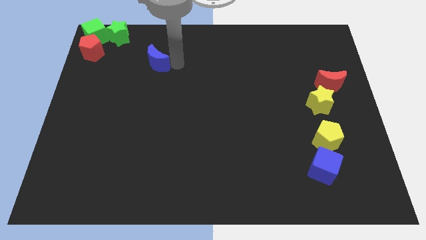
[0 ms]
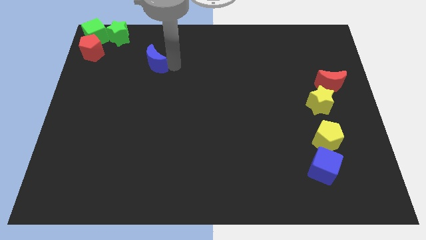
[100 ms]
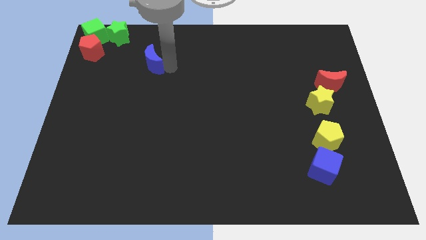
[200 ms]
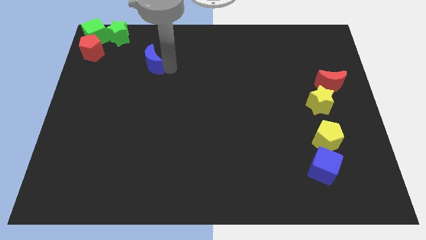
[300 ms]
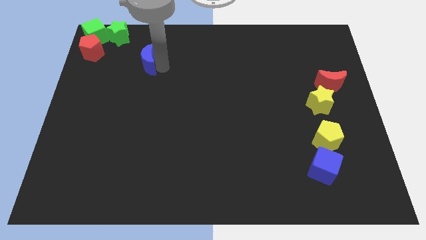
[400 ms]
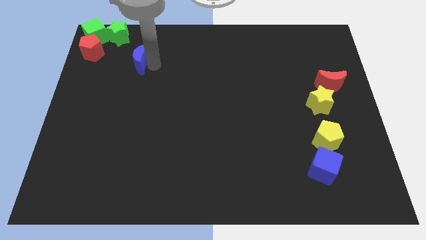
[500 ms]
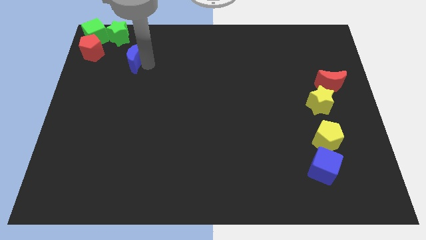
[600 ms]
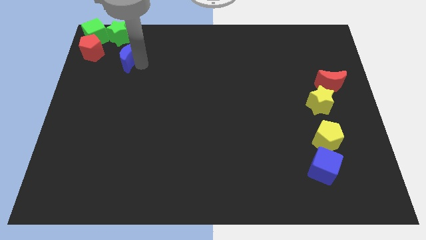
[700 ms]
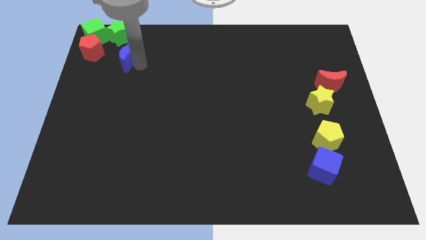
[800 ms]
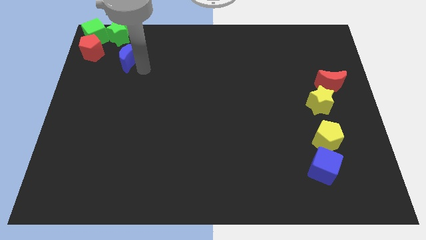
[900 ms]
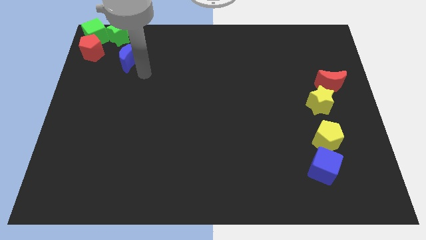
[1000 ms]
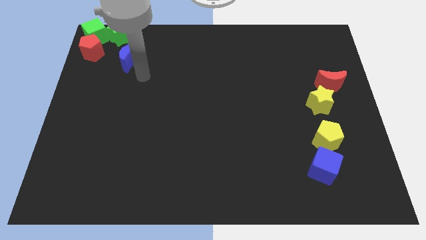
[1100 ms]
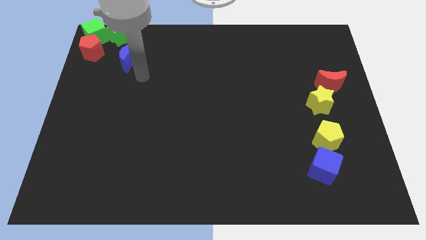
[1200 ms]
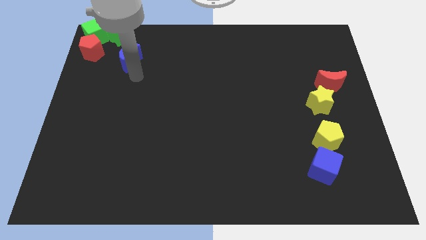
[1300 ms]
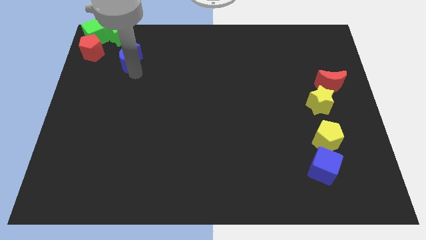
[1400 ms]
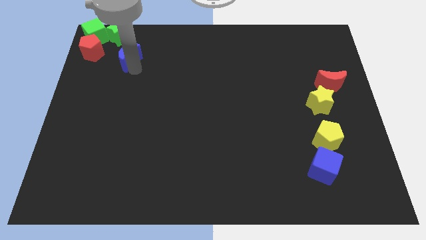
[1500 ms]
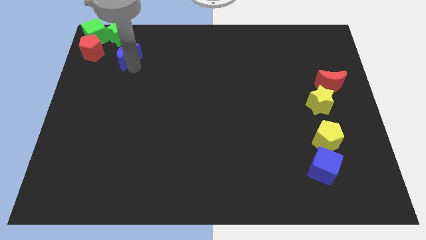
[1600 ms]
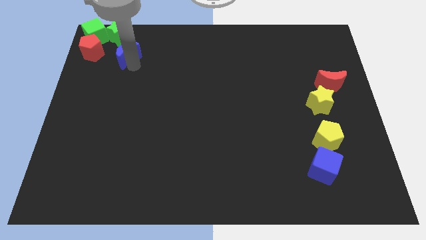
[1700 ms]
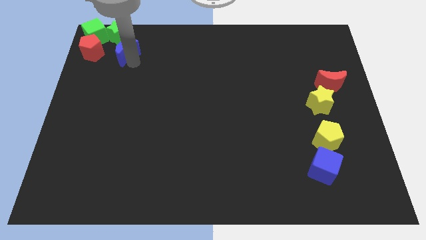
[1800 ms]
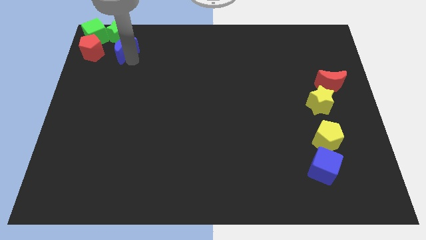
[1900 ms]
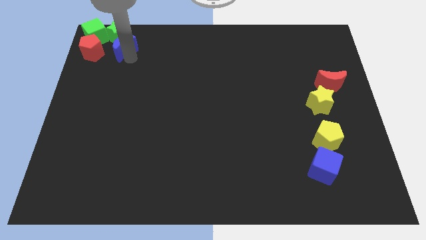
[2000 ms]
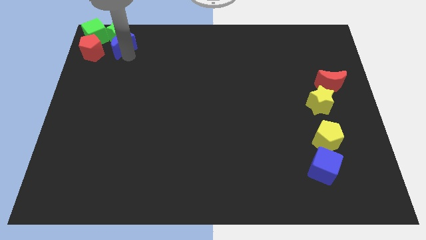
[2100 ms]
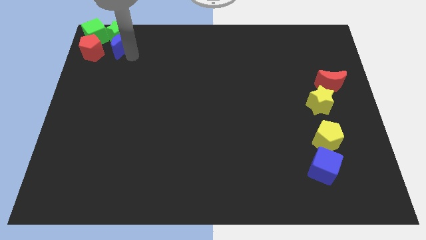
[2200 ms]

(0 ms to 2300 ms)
push the blue crescent towards the group of blocks at the top left corner of the board

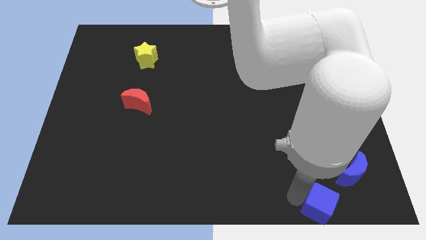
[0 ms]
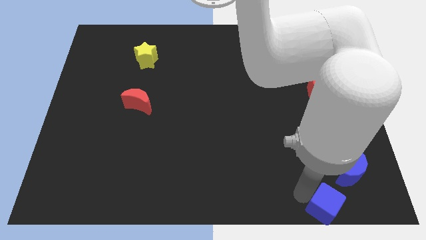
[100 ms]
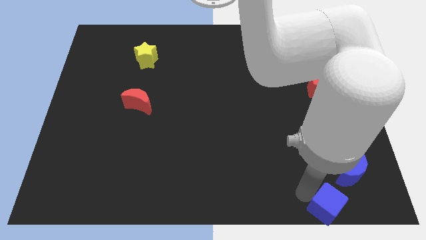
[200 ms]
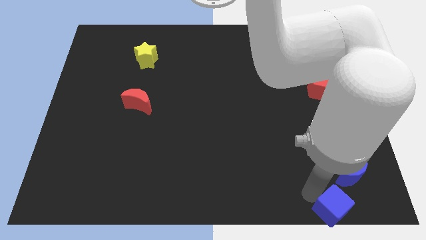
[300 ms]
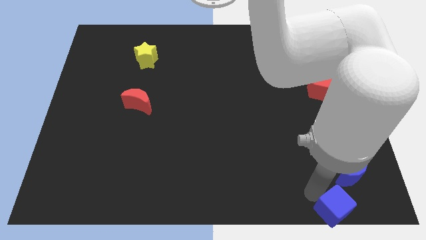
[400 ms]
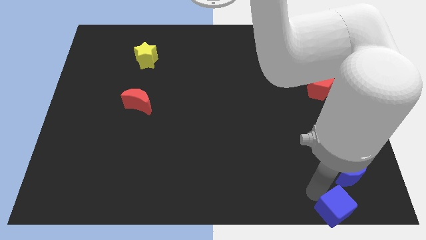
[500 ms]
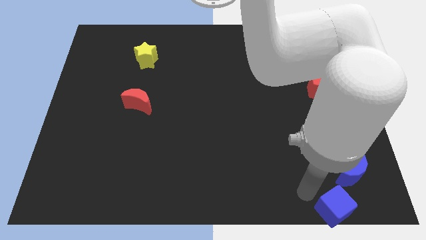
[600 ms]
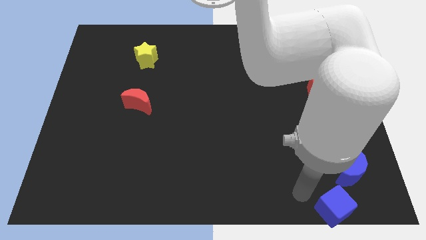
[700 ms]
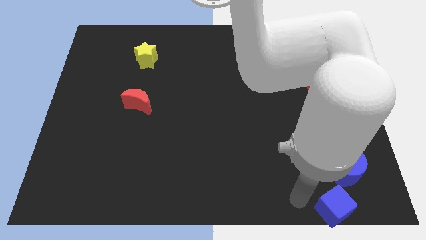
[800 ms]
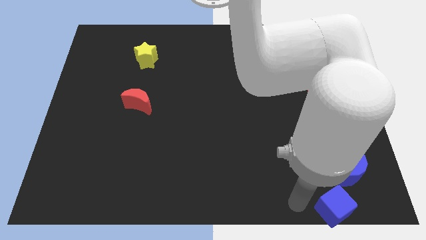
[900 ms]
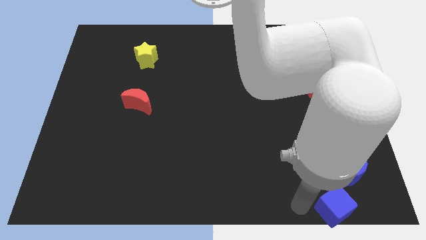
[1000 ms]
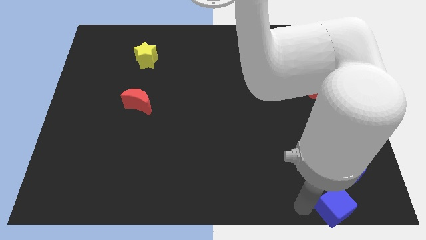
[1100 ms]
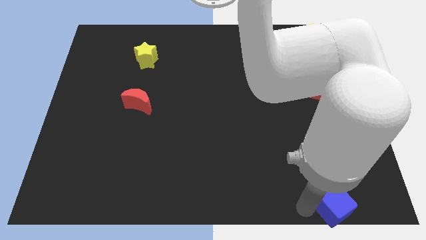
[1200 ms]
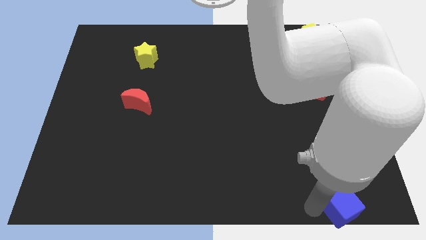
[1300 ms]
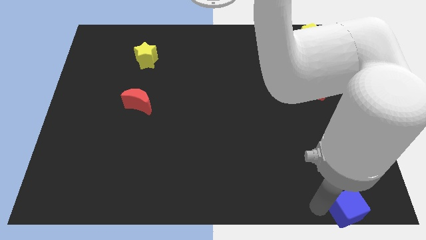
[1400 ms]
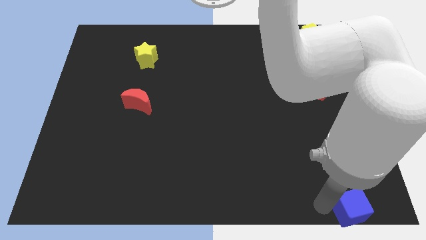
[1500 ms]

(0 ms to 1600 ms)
slightly push the blue cube to the right

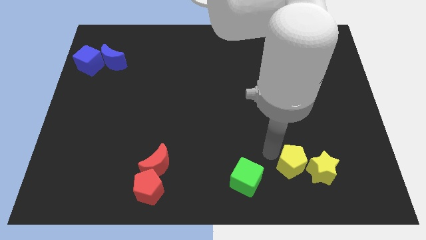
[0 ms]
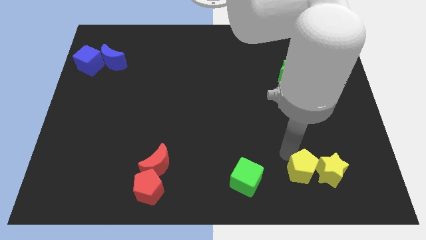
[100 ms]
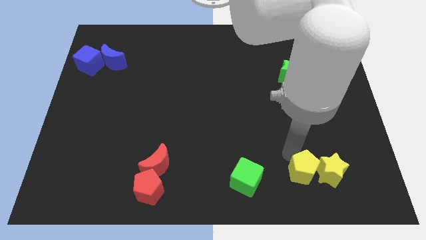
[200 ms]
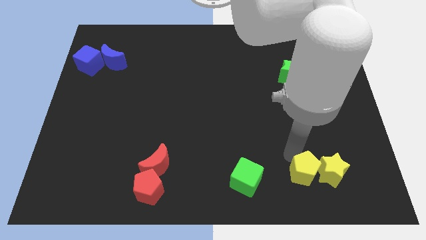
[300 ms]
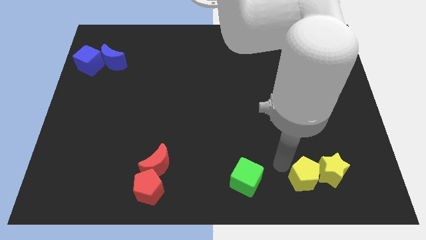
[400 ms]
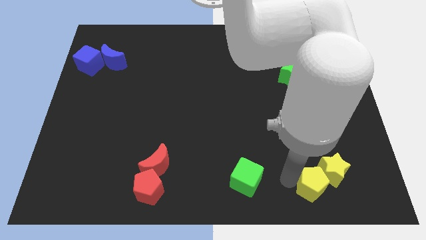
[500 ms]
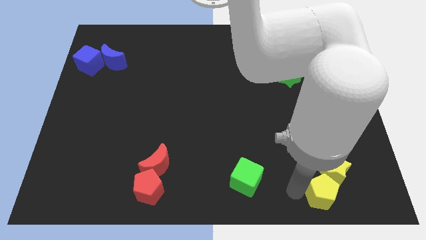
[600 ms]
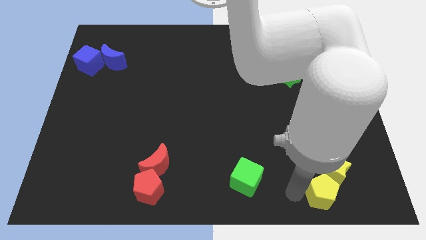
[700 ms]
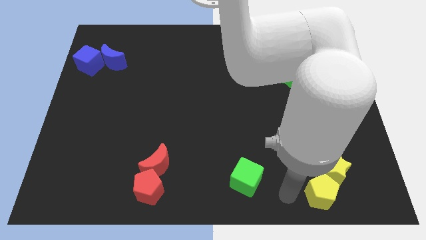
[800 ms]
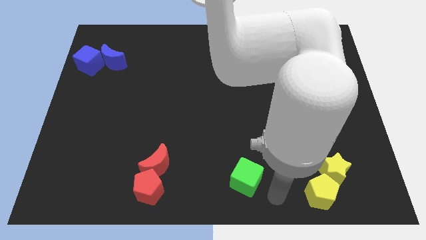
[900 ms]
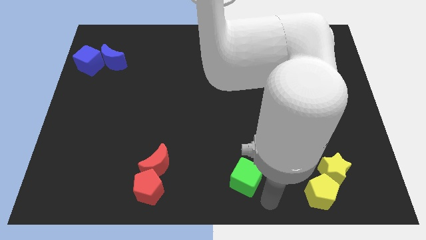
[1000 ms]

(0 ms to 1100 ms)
slide the yellow pentagon to the bottom side of the yellow star

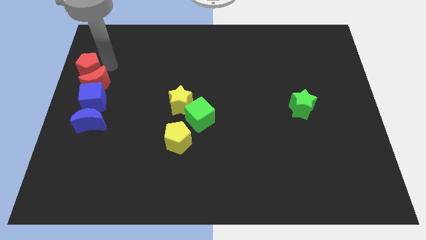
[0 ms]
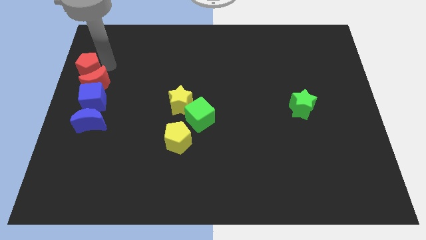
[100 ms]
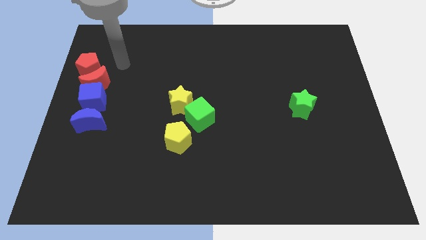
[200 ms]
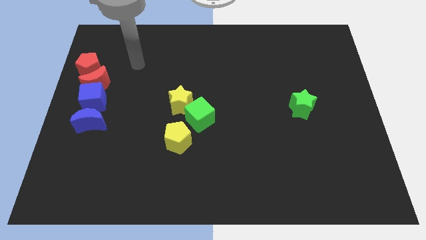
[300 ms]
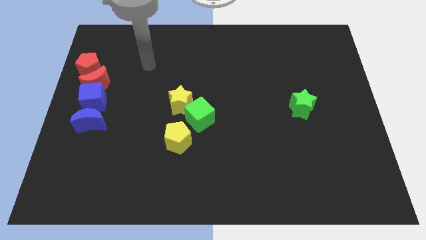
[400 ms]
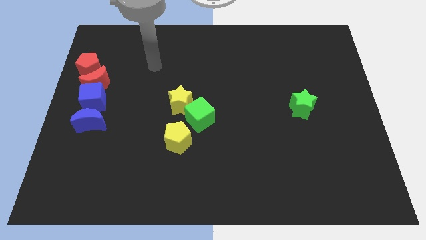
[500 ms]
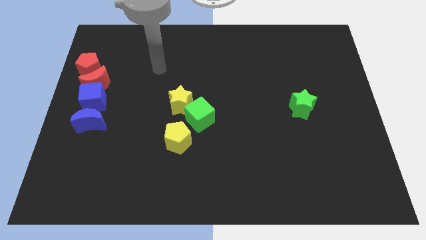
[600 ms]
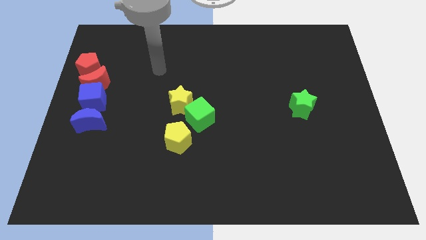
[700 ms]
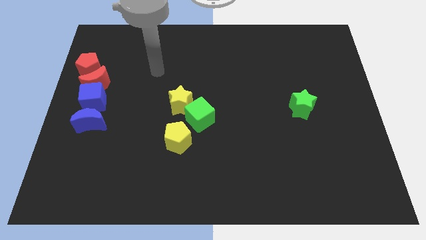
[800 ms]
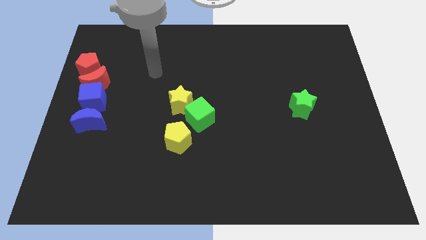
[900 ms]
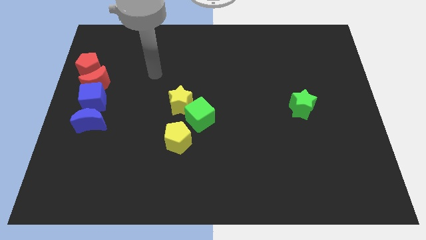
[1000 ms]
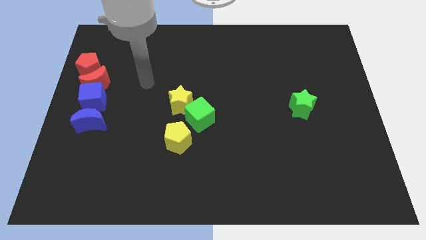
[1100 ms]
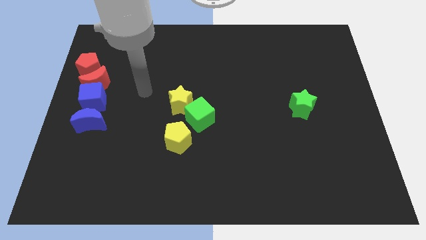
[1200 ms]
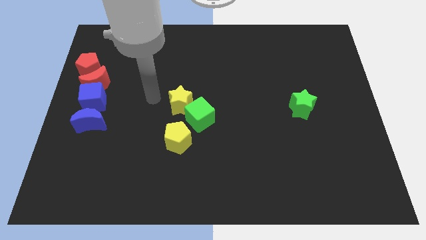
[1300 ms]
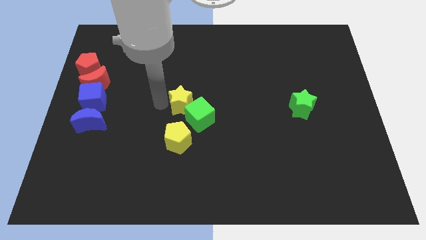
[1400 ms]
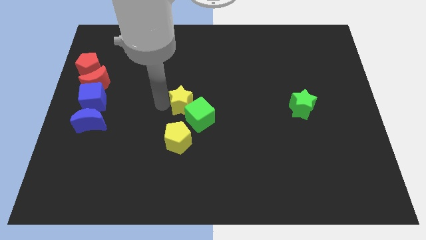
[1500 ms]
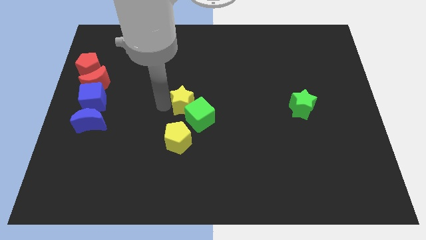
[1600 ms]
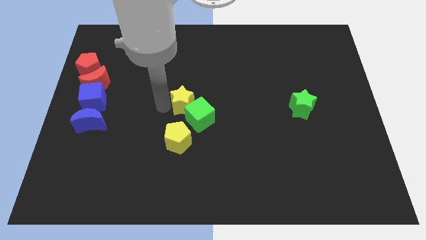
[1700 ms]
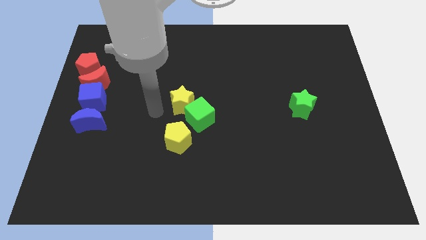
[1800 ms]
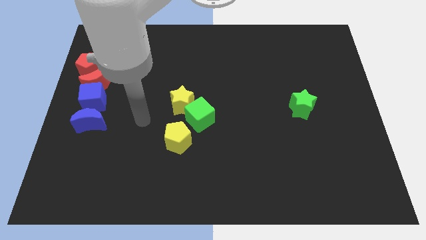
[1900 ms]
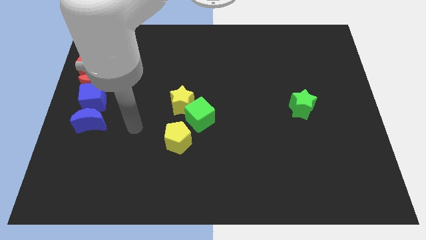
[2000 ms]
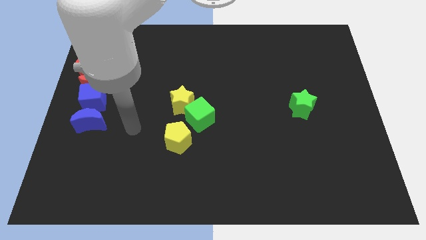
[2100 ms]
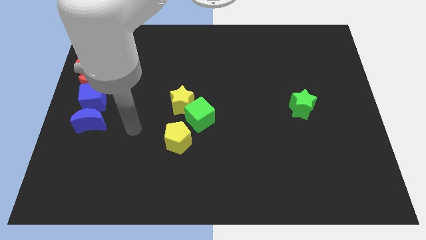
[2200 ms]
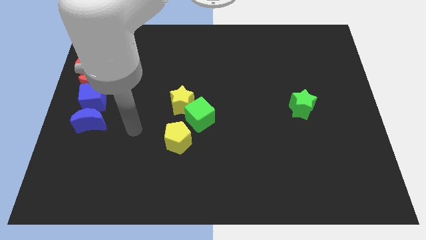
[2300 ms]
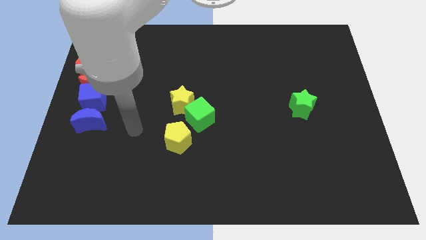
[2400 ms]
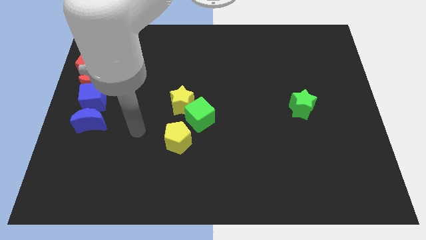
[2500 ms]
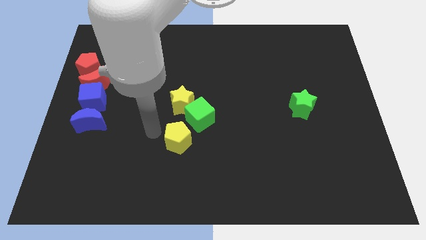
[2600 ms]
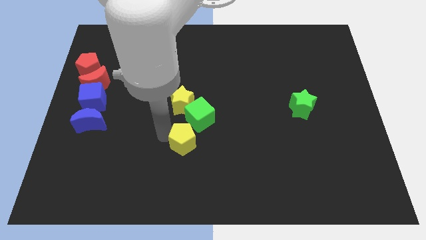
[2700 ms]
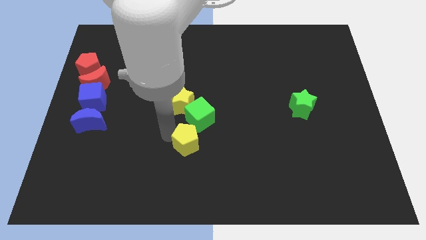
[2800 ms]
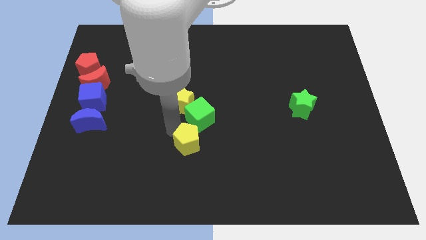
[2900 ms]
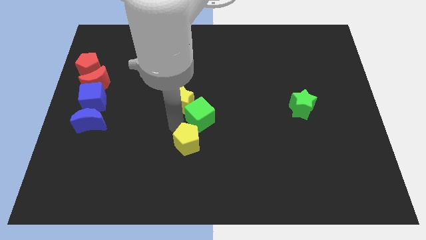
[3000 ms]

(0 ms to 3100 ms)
slide the yellow star and yellow pentagon int the left side of the green cube

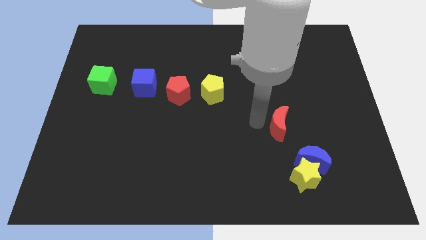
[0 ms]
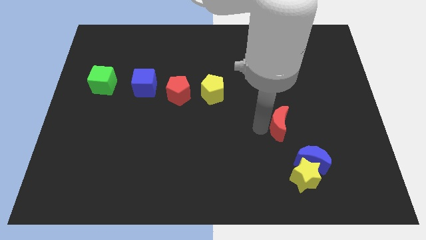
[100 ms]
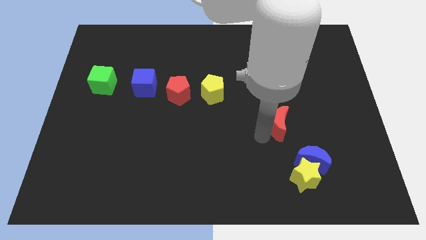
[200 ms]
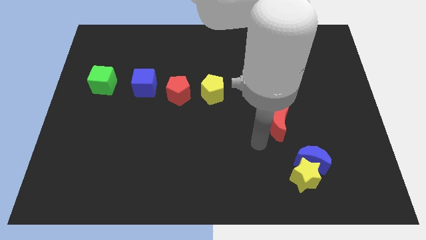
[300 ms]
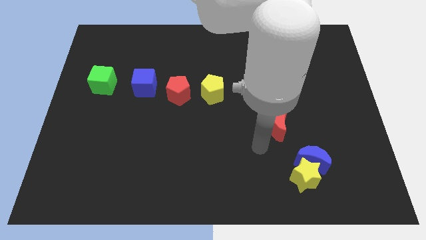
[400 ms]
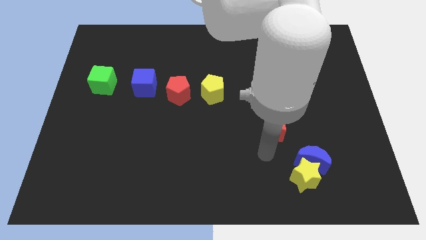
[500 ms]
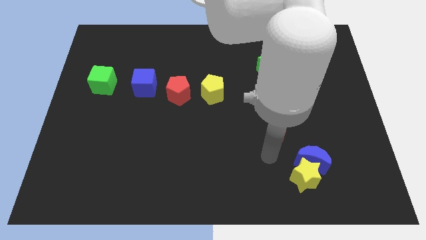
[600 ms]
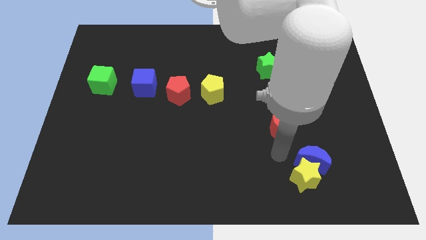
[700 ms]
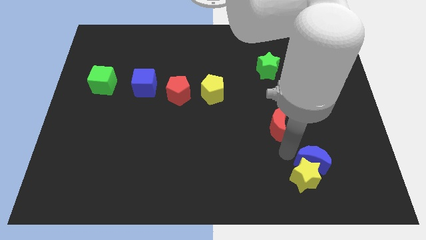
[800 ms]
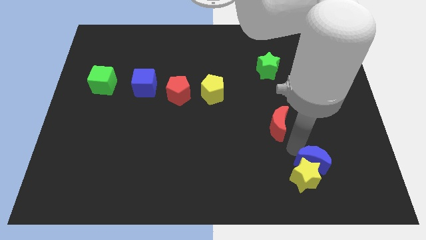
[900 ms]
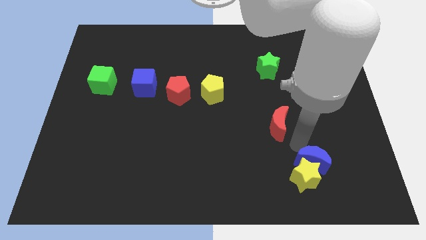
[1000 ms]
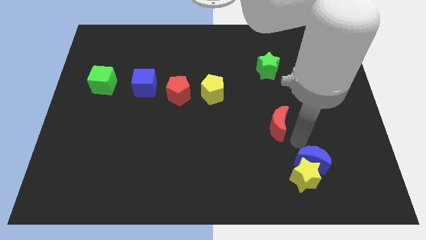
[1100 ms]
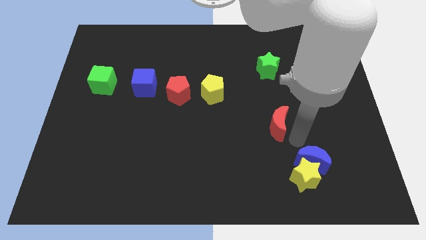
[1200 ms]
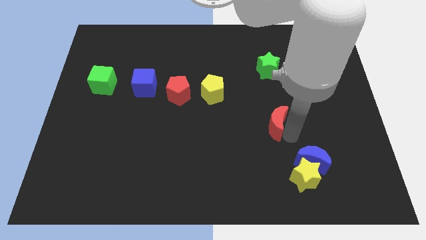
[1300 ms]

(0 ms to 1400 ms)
move the arm to the right of the red moon
